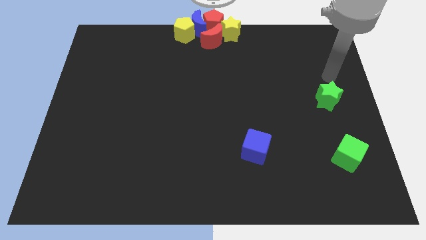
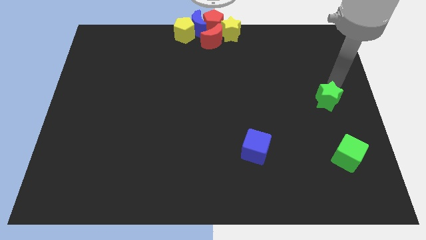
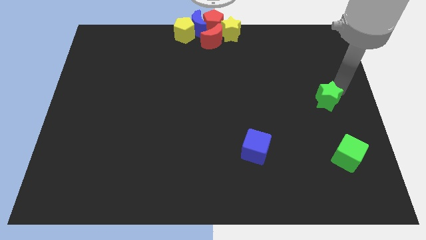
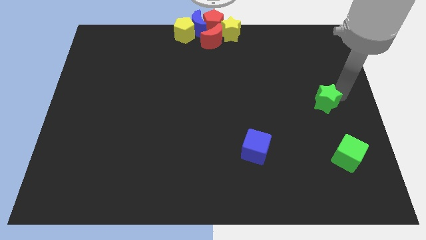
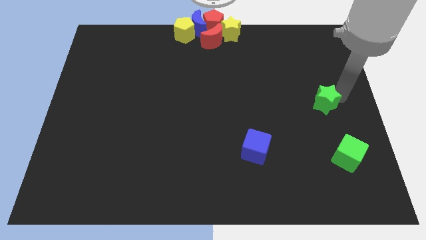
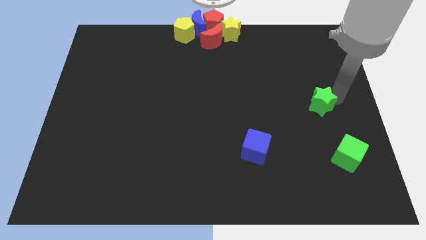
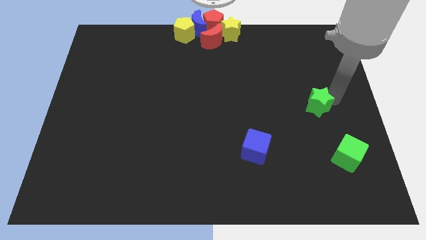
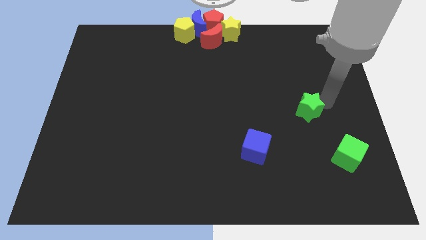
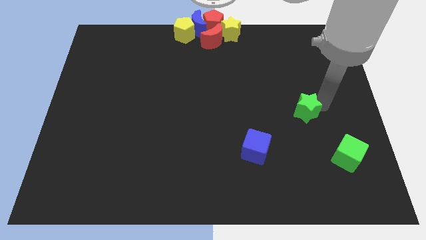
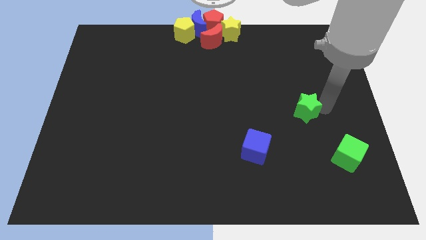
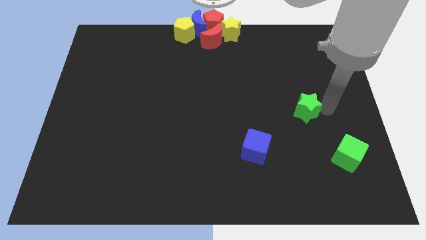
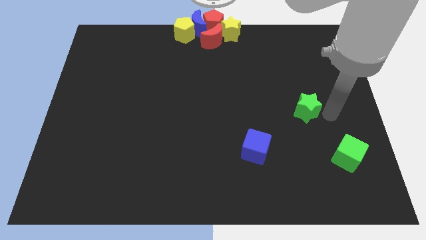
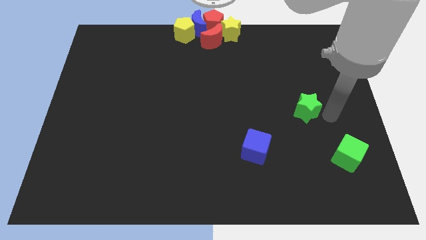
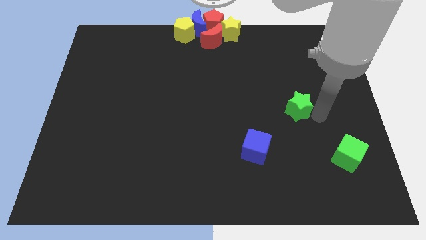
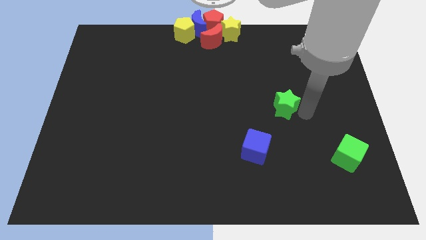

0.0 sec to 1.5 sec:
drag the green star diagonally on the top right side of the blue cube

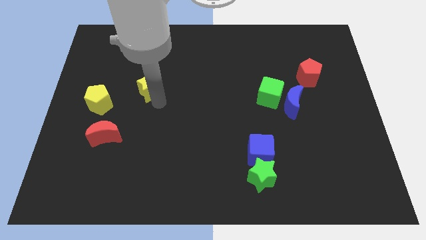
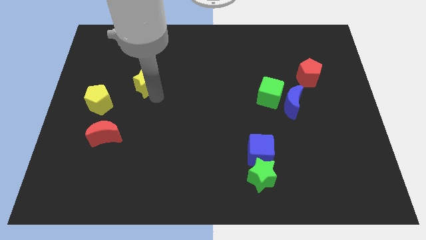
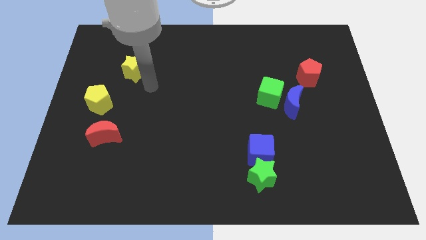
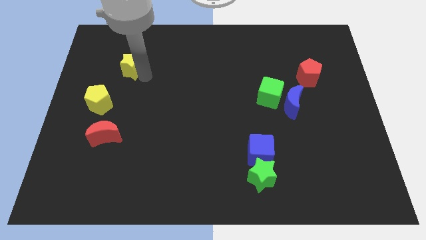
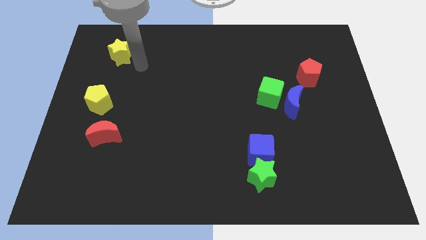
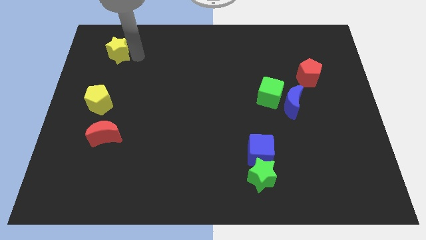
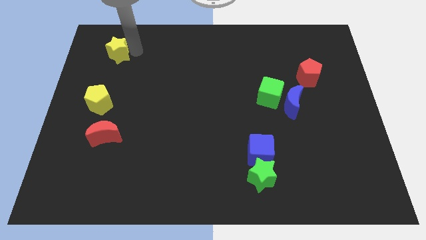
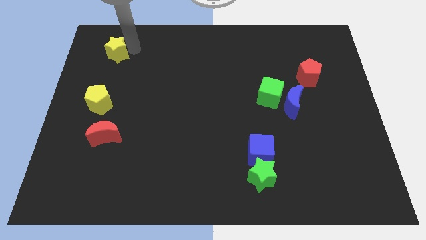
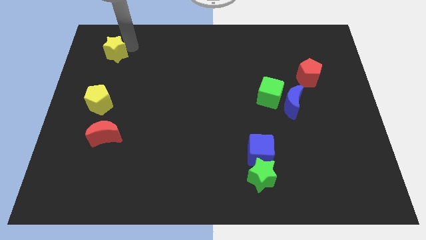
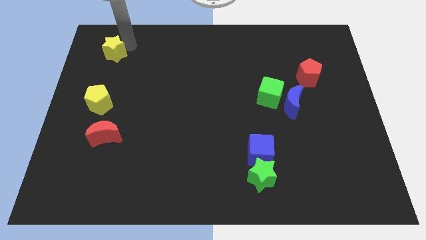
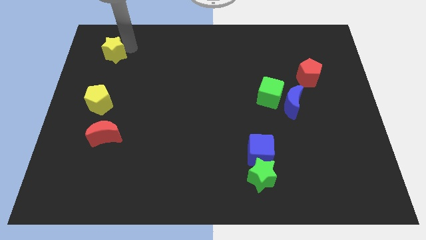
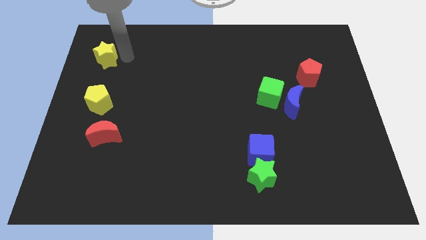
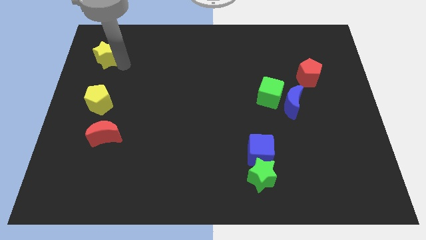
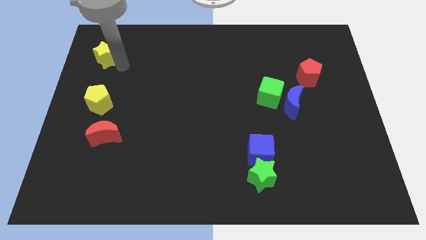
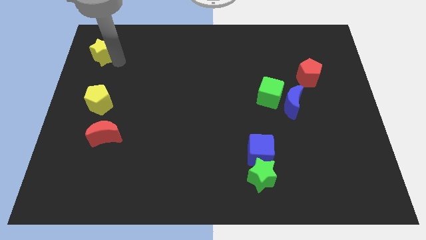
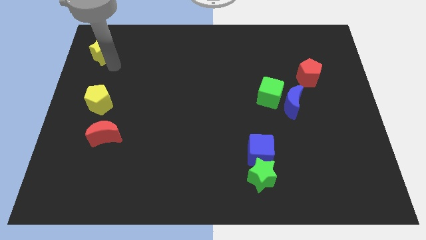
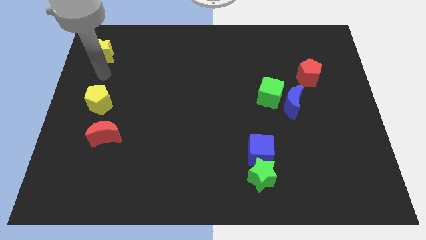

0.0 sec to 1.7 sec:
place the yellow star above the yellow pentagon

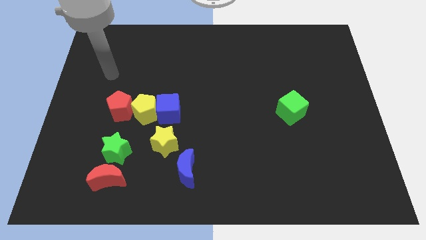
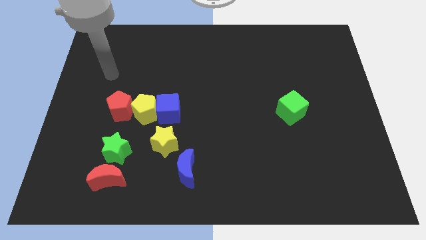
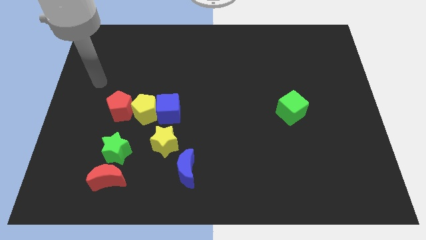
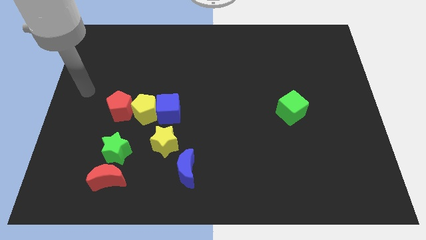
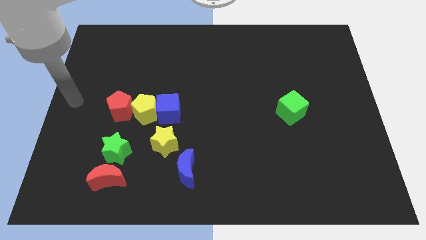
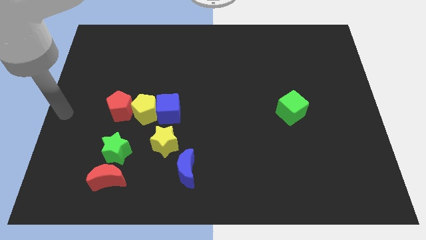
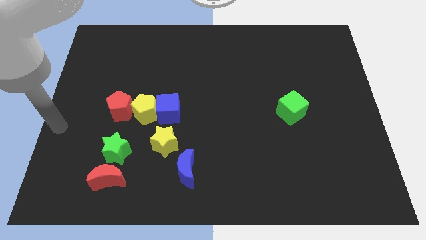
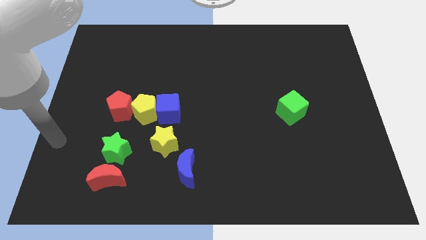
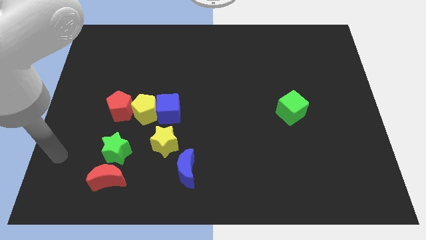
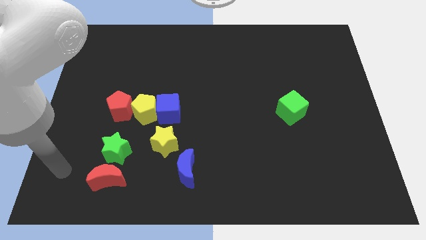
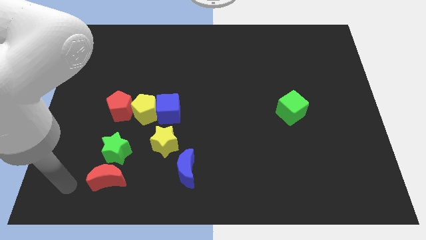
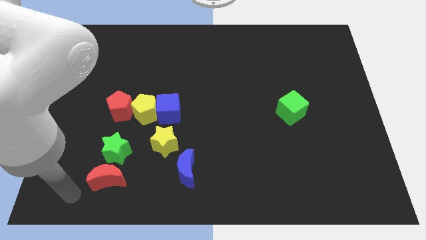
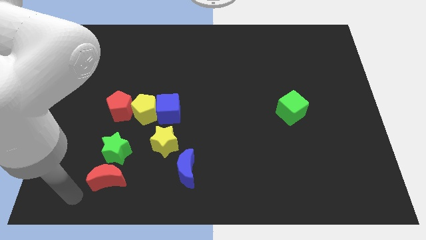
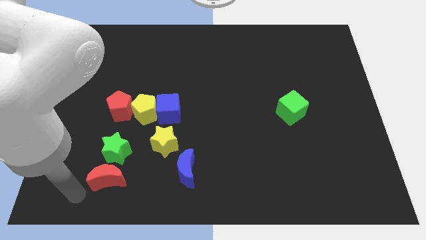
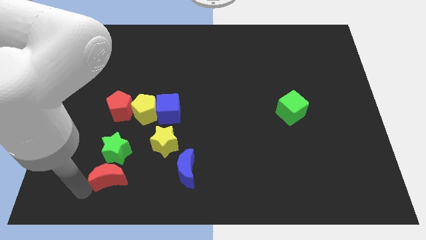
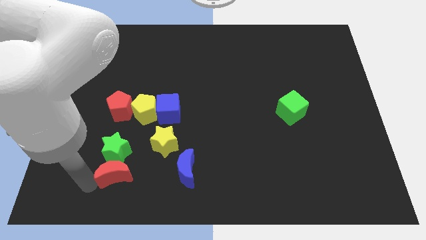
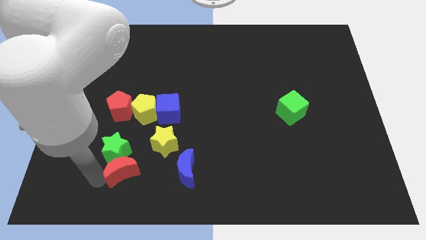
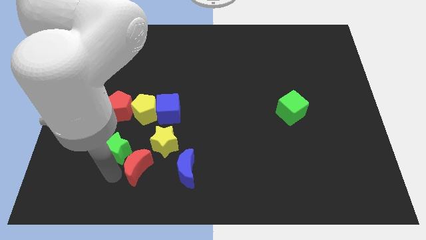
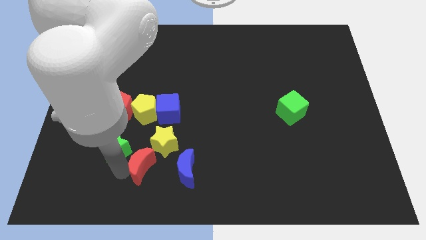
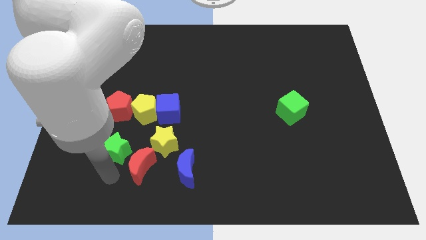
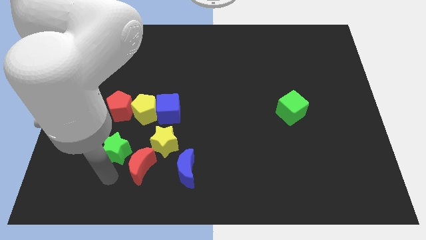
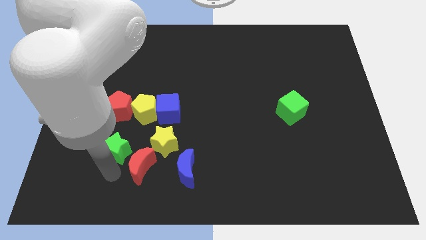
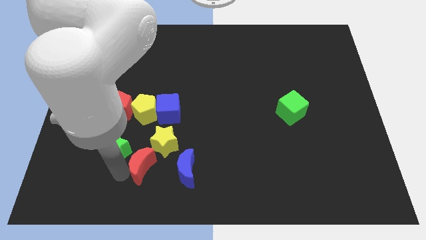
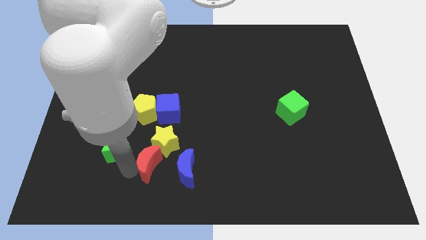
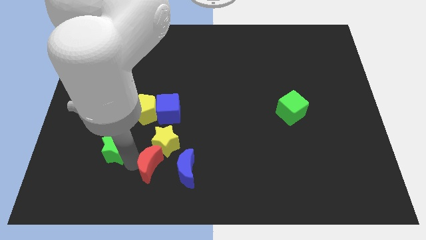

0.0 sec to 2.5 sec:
place the red moon to the bottom of the yellow star

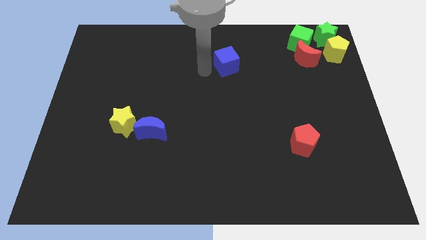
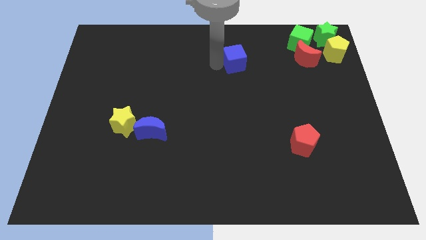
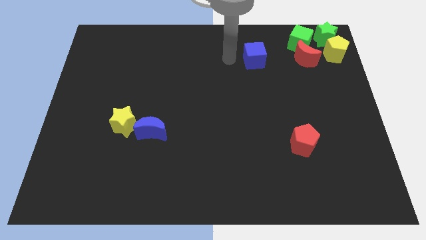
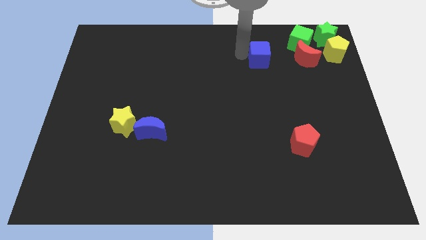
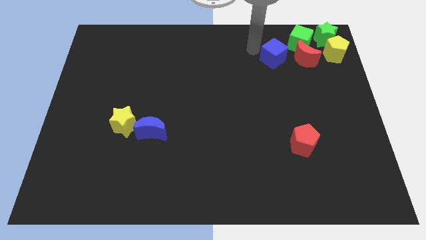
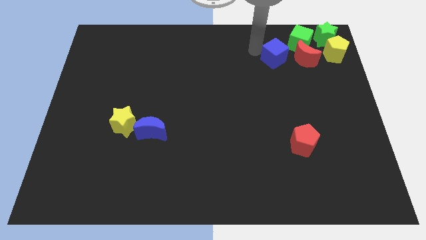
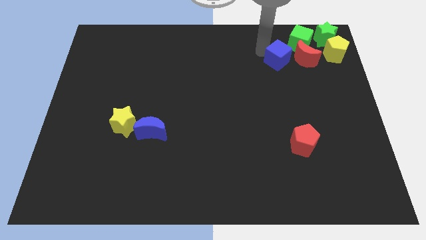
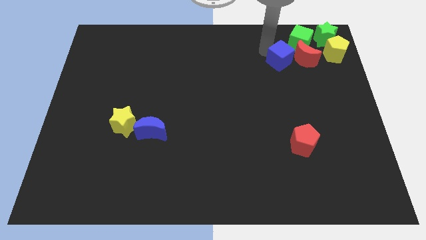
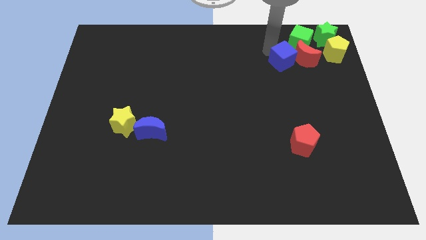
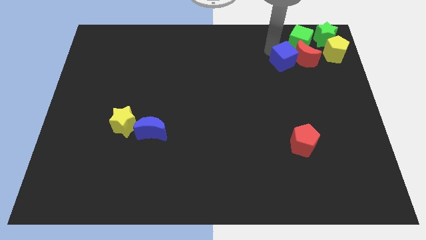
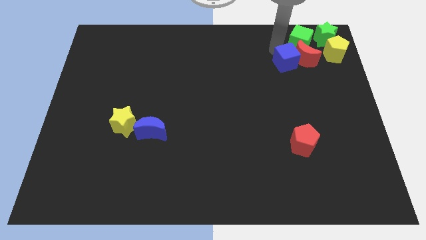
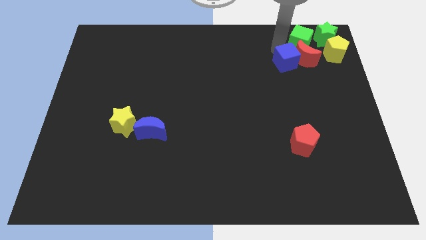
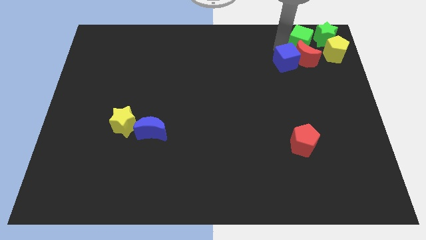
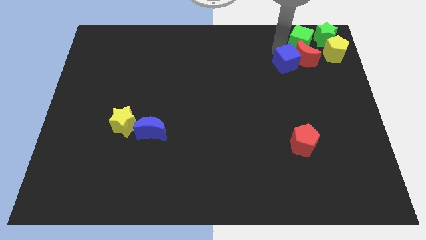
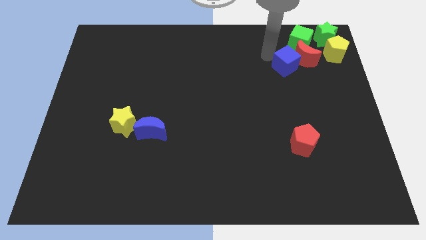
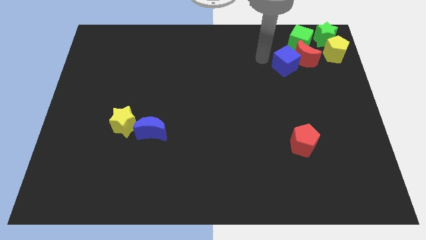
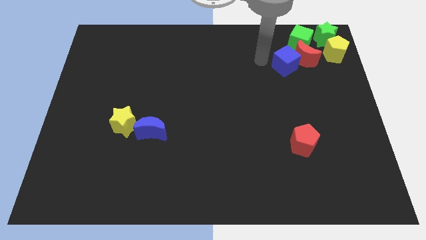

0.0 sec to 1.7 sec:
place a blue cube into the red moon

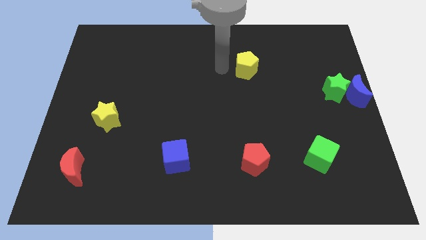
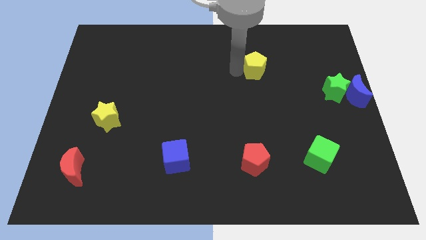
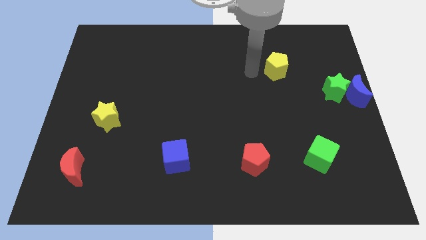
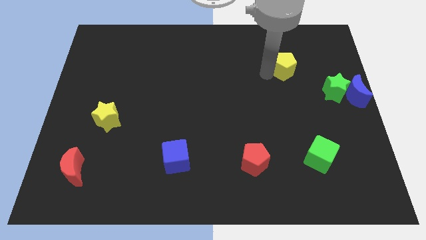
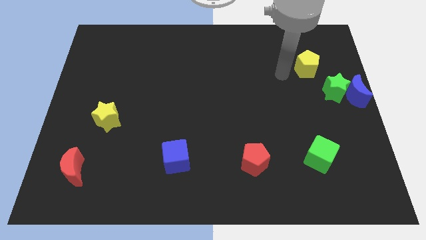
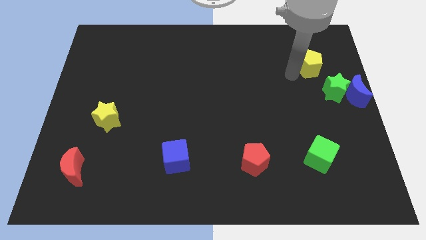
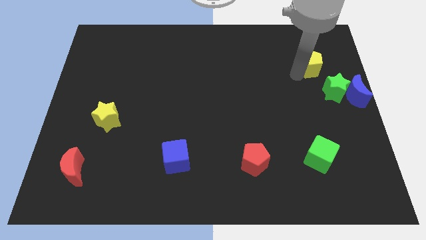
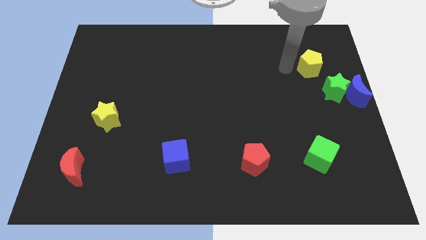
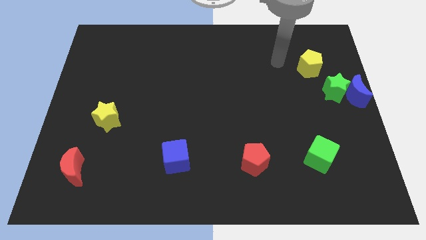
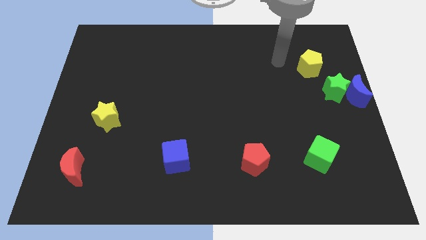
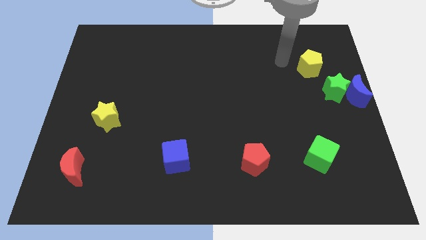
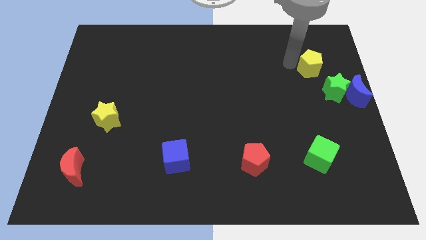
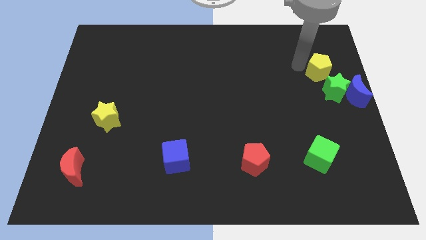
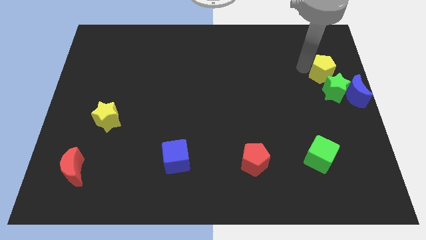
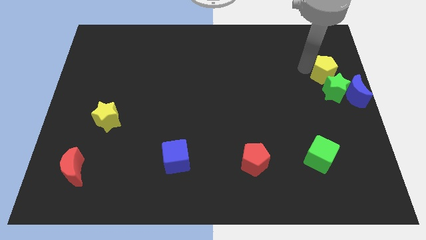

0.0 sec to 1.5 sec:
move the yellow pentagon to the top left of the green star

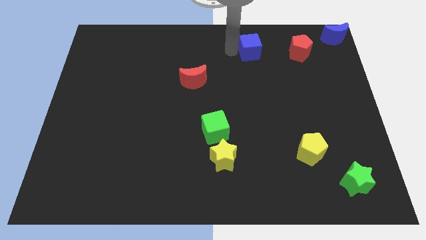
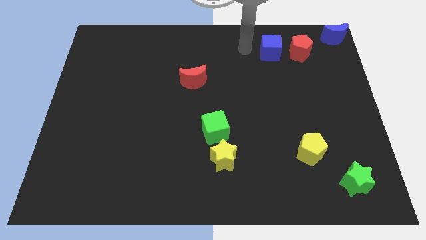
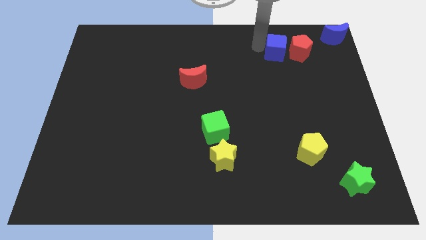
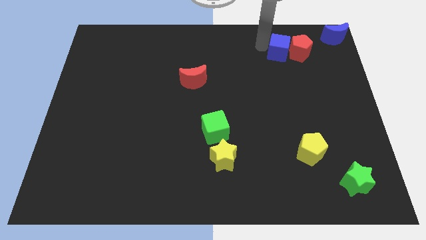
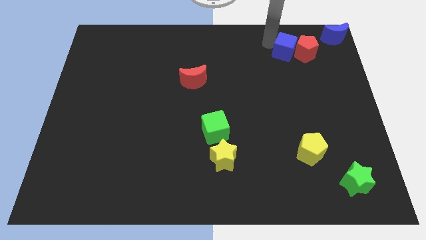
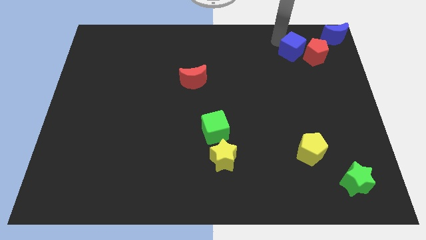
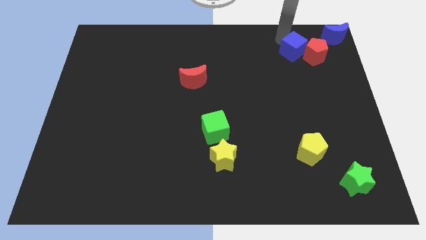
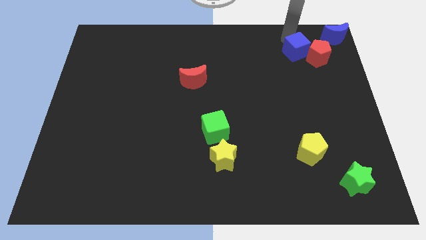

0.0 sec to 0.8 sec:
move the blue cube to the left of the red pentagon
